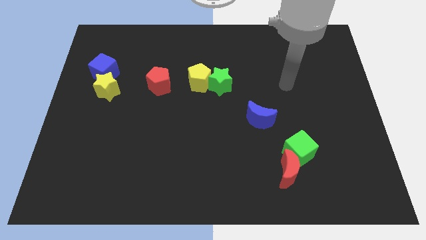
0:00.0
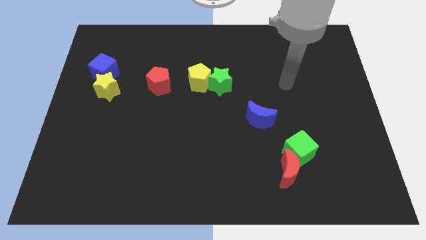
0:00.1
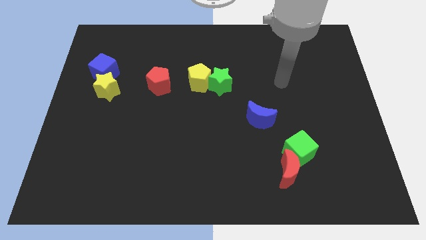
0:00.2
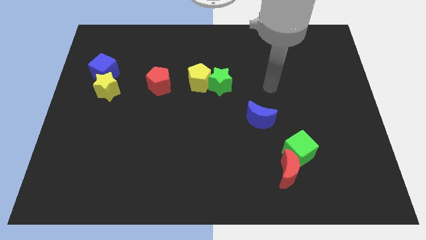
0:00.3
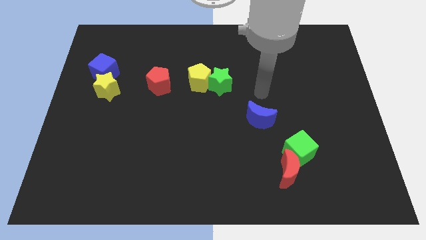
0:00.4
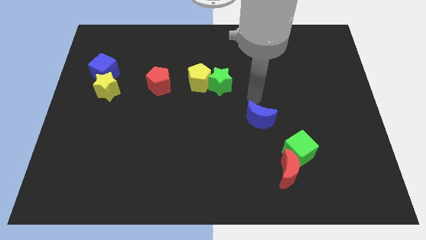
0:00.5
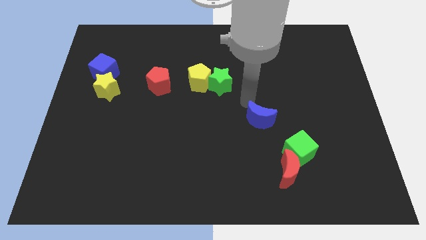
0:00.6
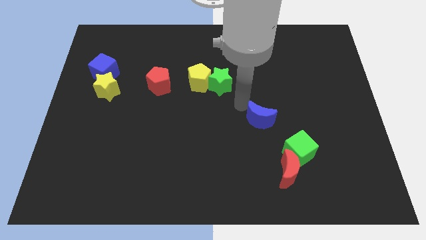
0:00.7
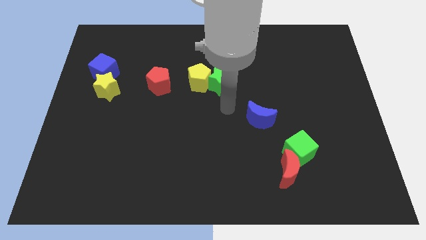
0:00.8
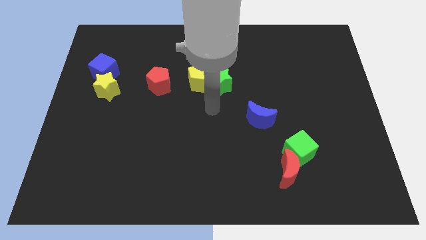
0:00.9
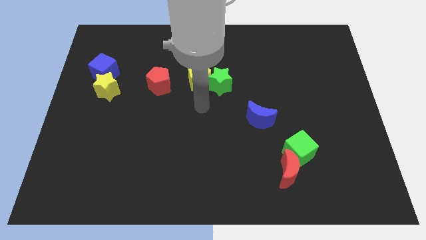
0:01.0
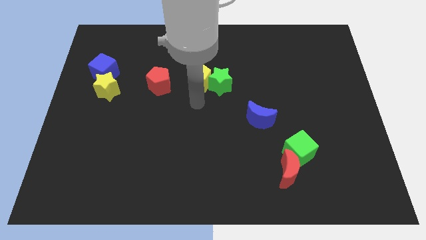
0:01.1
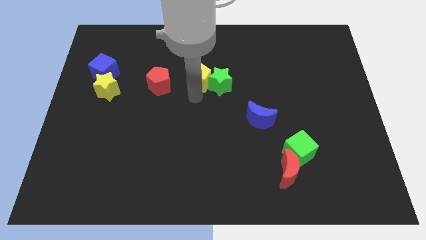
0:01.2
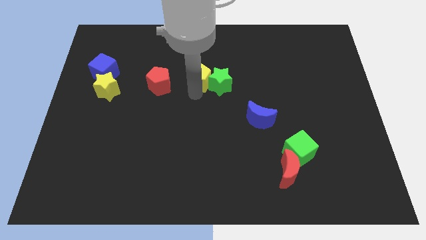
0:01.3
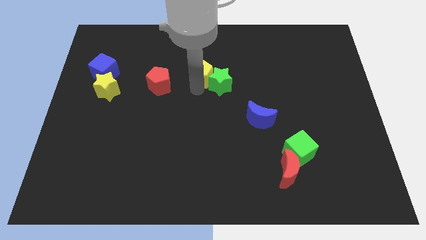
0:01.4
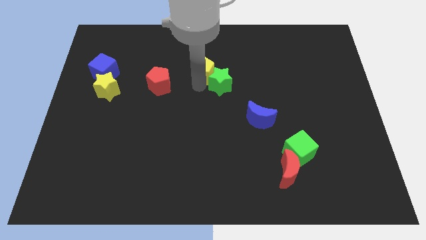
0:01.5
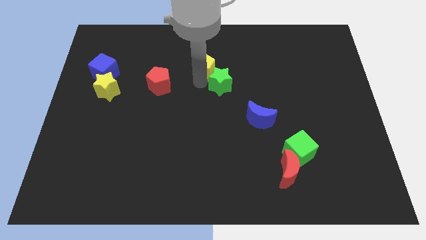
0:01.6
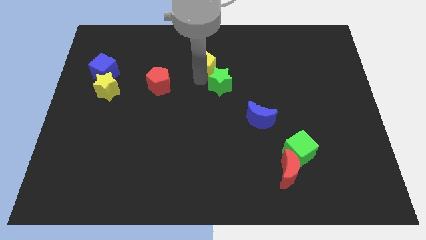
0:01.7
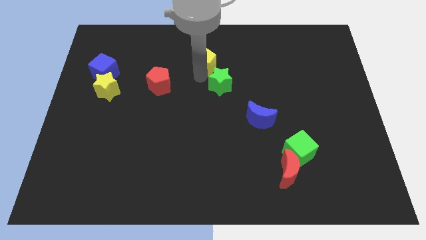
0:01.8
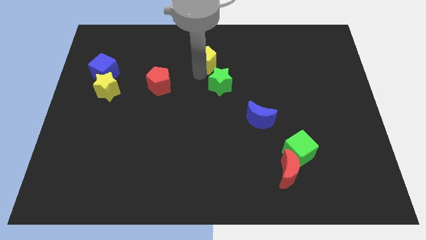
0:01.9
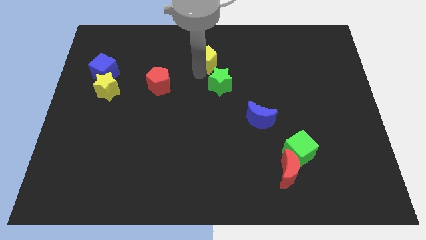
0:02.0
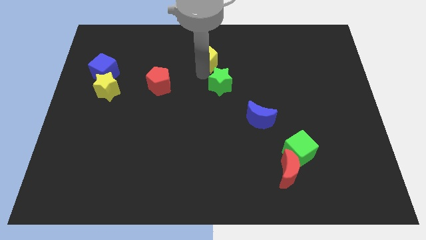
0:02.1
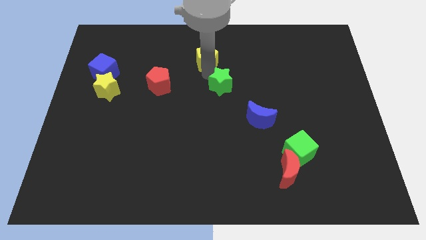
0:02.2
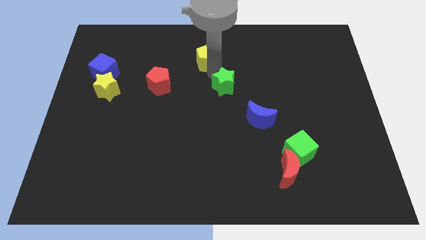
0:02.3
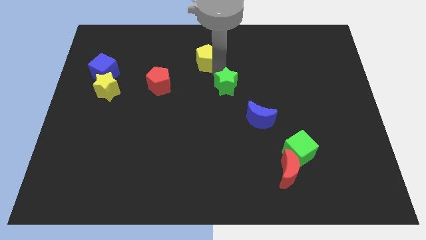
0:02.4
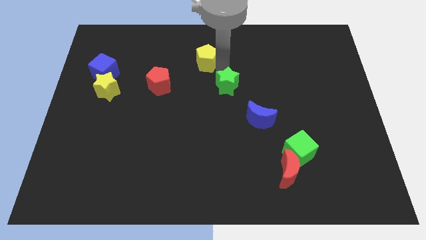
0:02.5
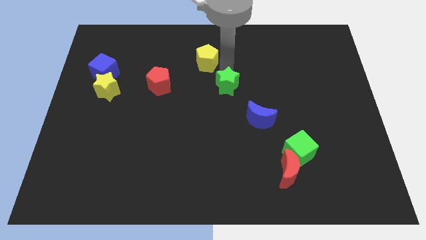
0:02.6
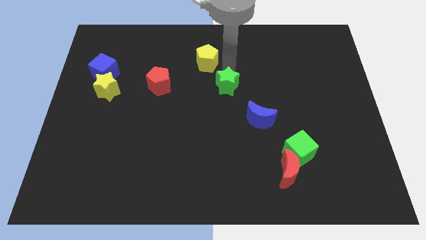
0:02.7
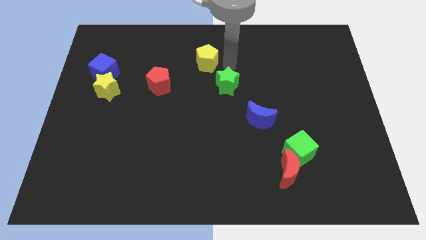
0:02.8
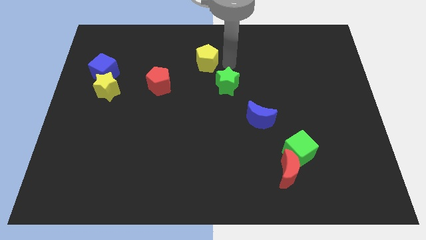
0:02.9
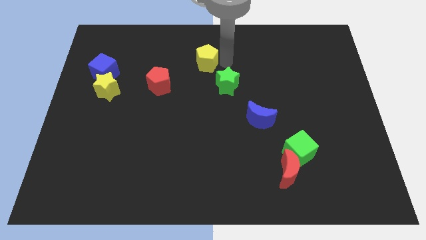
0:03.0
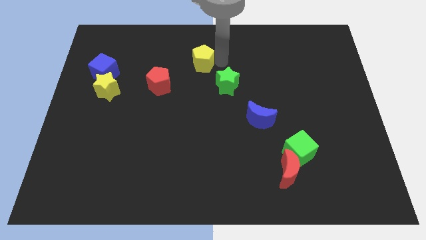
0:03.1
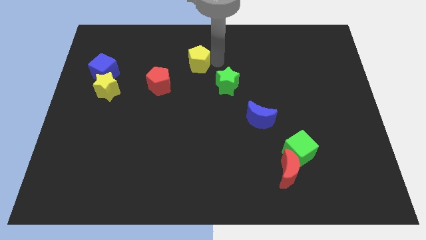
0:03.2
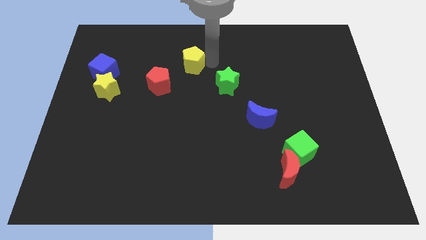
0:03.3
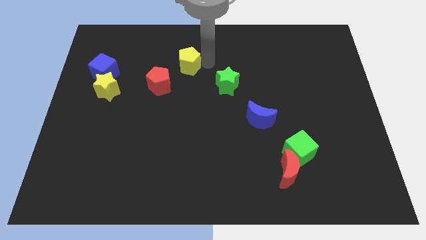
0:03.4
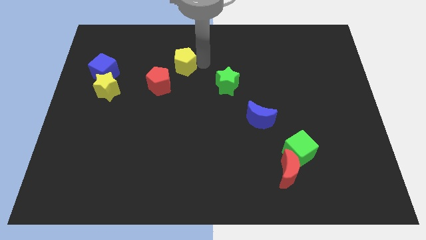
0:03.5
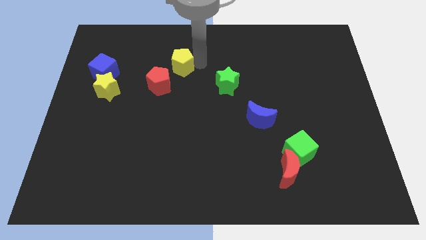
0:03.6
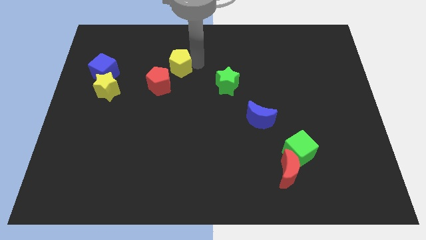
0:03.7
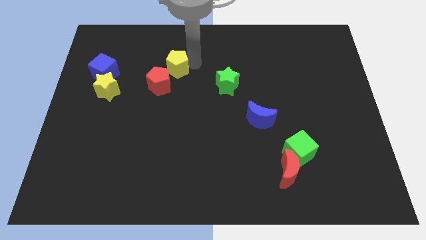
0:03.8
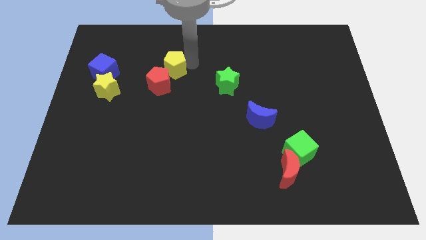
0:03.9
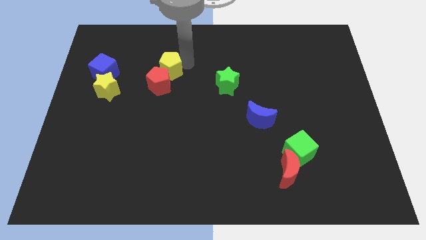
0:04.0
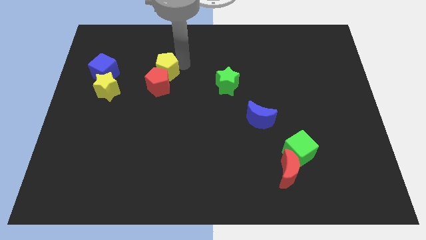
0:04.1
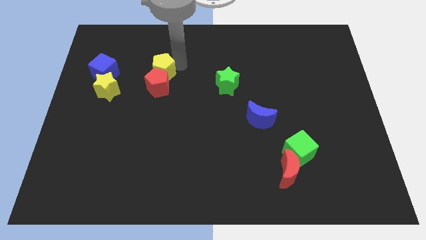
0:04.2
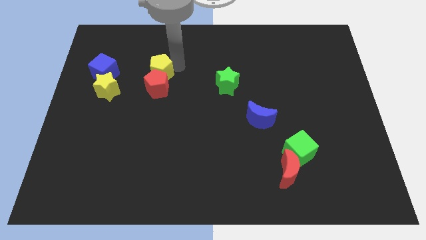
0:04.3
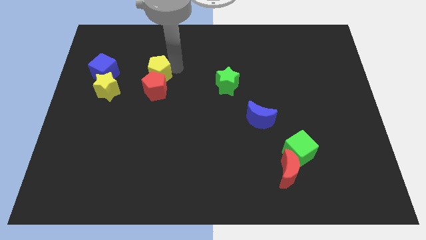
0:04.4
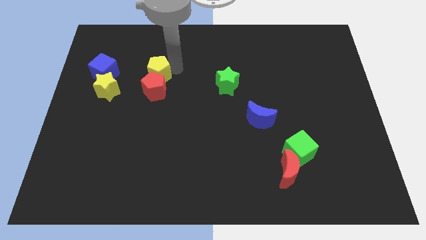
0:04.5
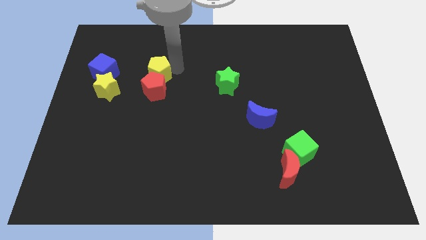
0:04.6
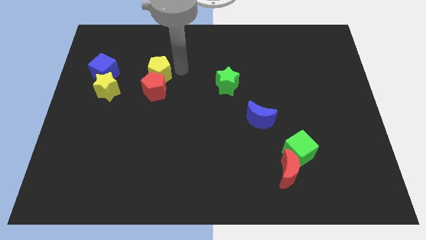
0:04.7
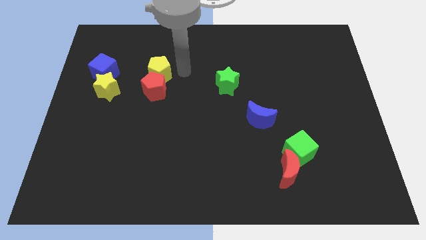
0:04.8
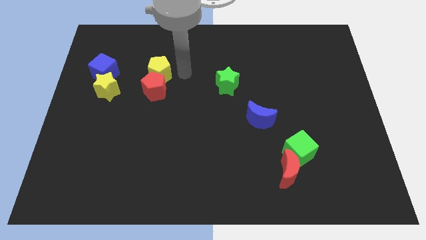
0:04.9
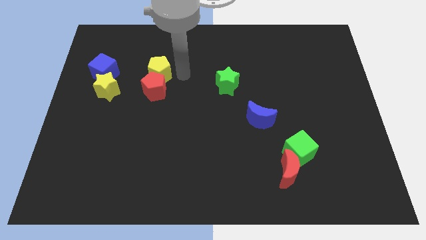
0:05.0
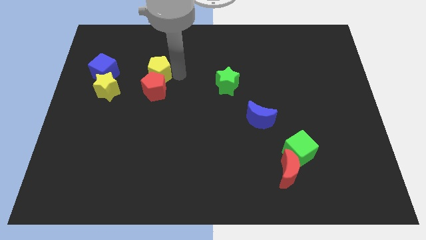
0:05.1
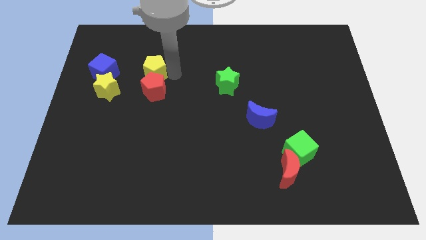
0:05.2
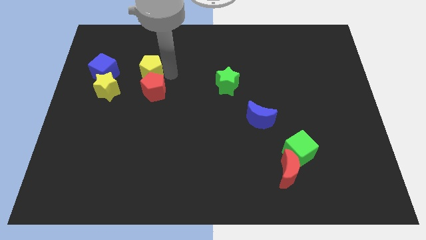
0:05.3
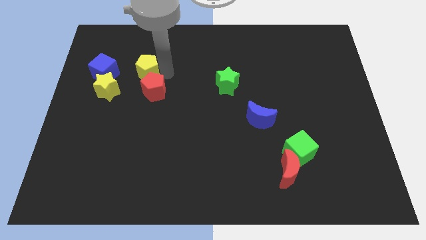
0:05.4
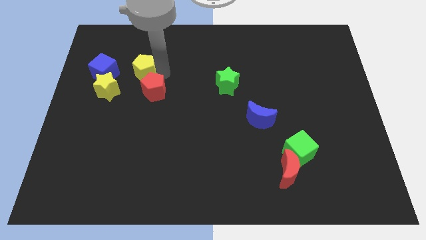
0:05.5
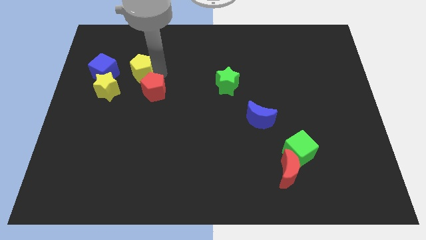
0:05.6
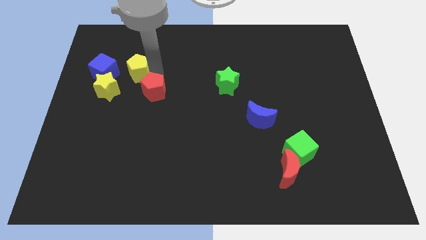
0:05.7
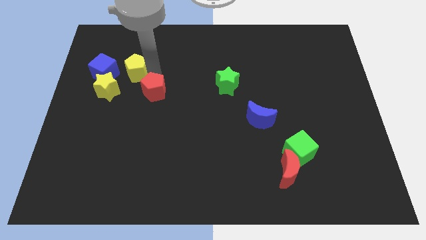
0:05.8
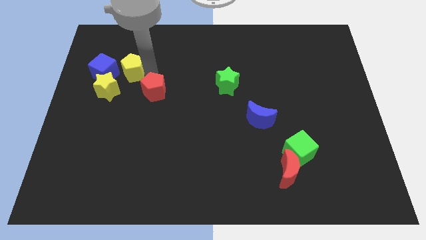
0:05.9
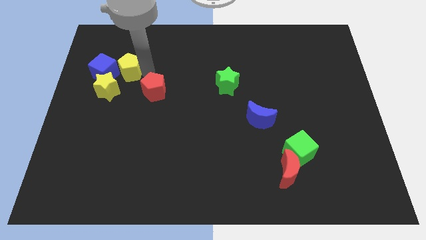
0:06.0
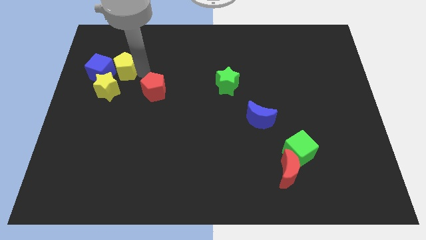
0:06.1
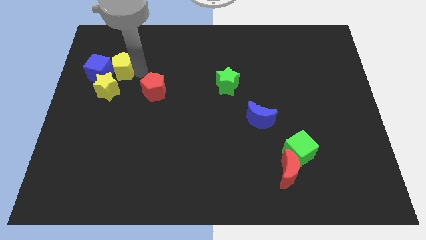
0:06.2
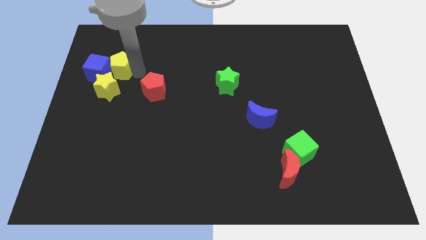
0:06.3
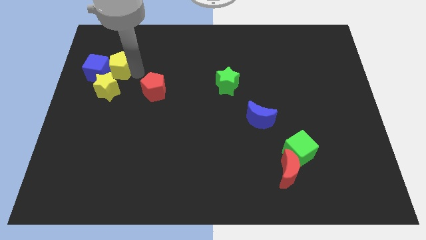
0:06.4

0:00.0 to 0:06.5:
put the yellow pentagon to the blue cube

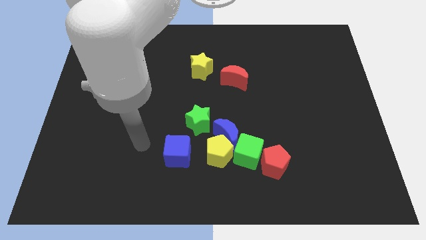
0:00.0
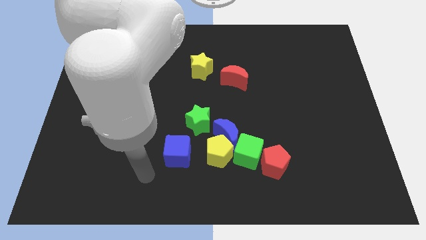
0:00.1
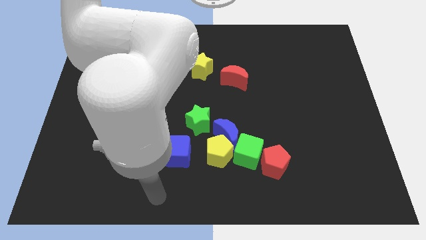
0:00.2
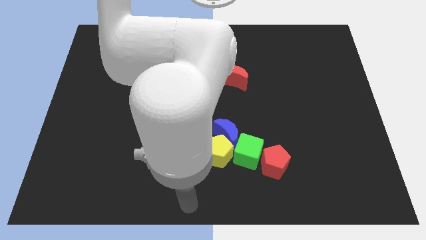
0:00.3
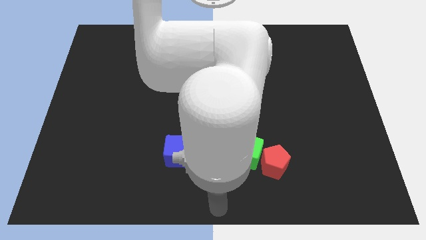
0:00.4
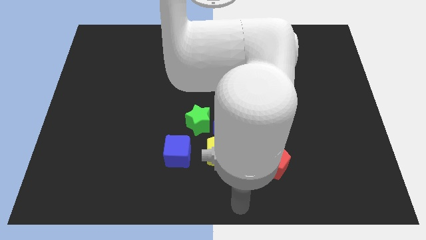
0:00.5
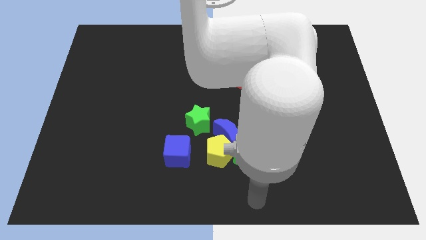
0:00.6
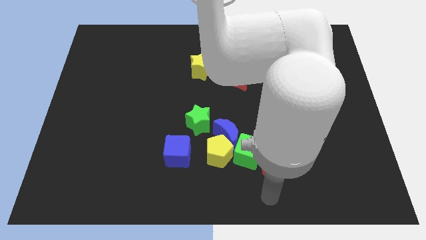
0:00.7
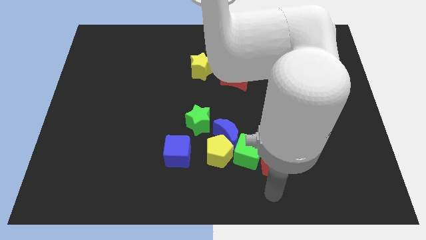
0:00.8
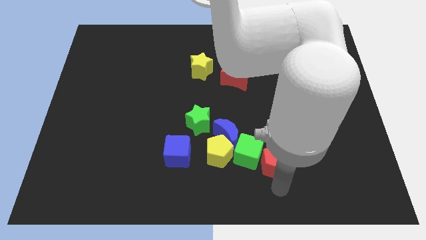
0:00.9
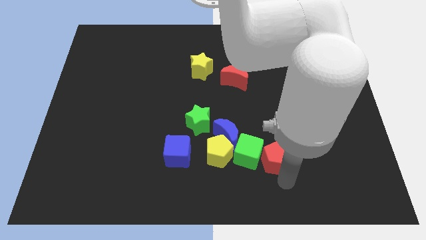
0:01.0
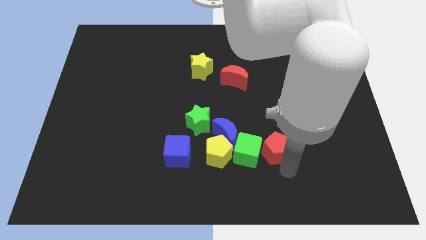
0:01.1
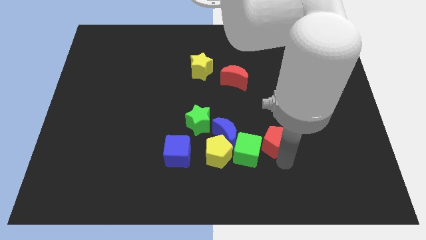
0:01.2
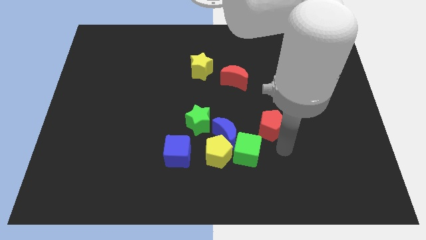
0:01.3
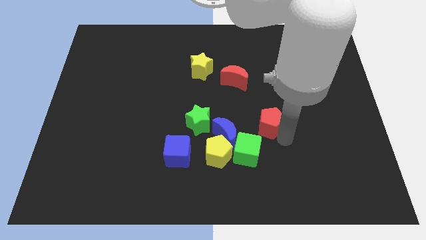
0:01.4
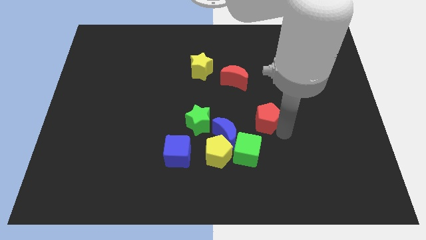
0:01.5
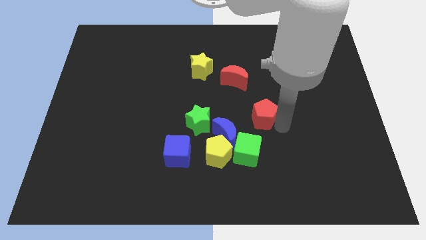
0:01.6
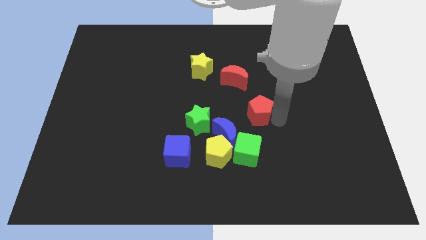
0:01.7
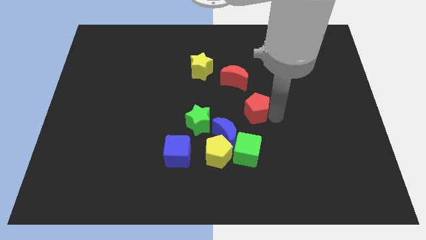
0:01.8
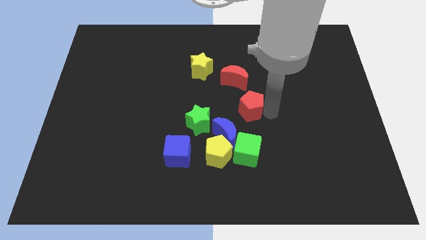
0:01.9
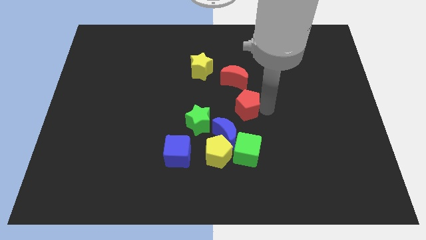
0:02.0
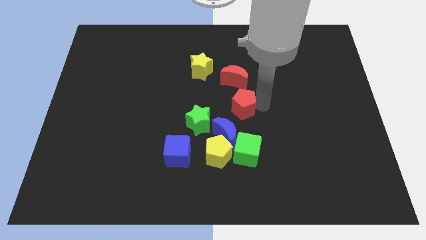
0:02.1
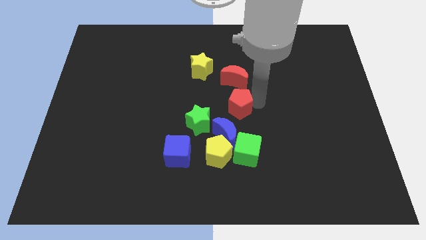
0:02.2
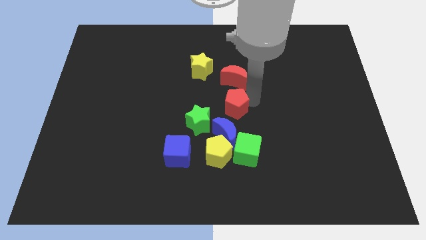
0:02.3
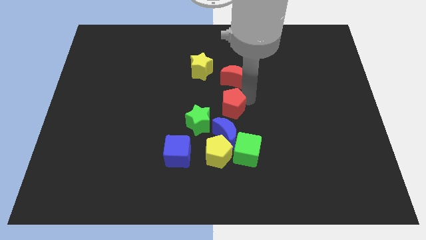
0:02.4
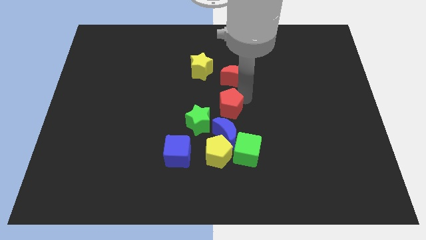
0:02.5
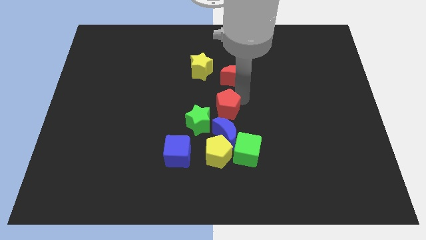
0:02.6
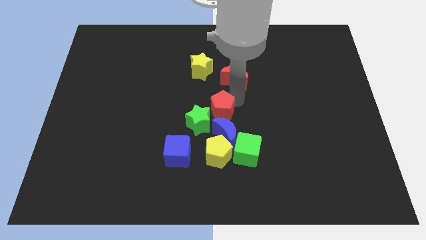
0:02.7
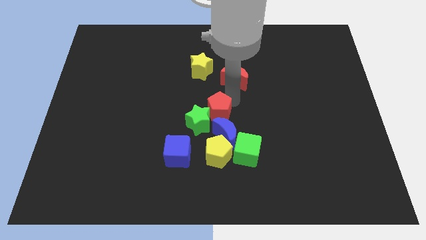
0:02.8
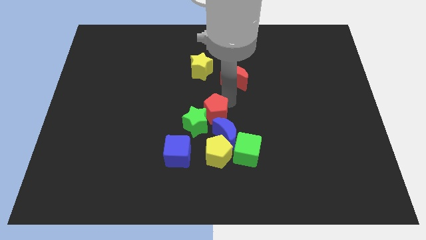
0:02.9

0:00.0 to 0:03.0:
move the red pentagon to the green star
